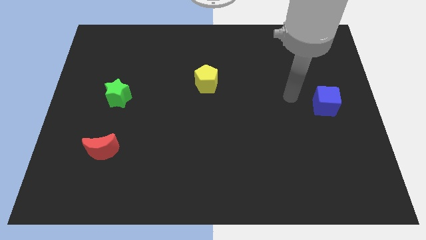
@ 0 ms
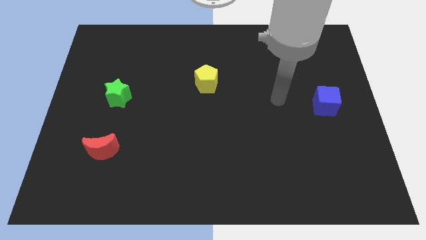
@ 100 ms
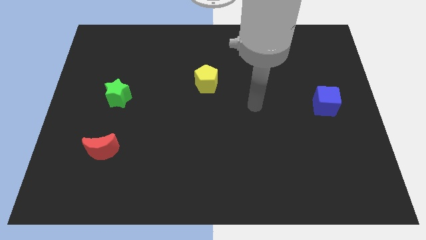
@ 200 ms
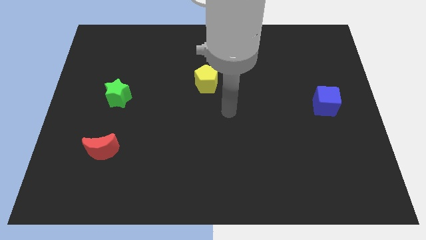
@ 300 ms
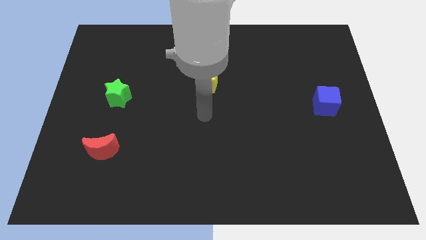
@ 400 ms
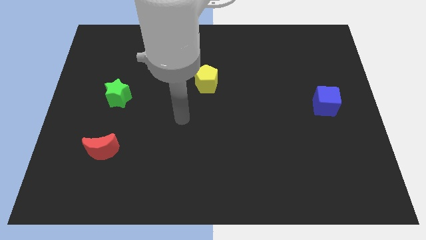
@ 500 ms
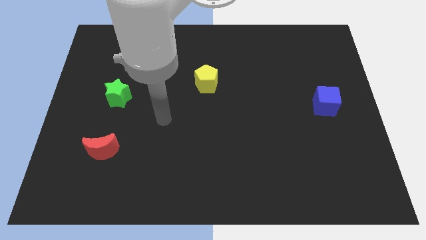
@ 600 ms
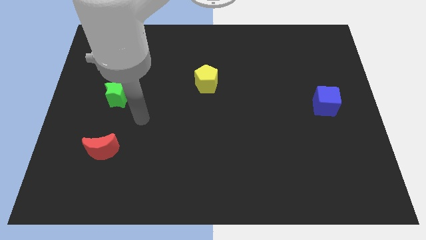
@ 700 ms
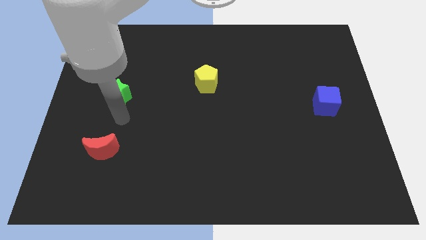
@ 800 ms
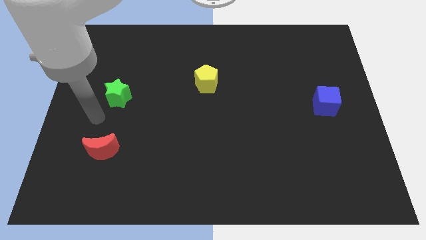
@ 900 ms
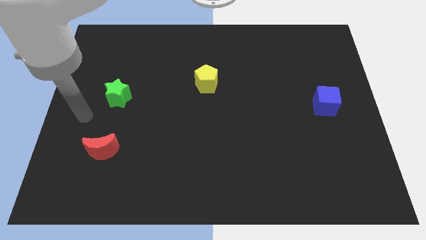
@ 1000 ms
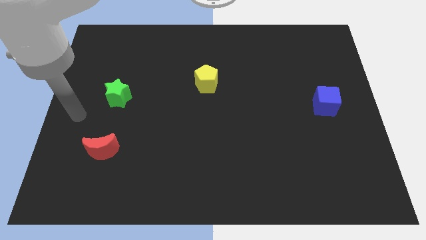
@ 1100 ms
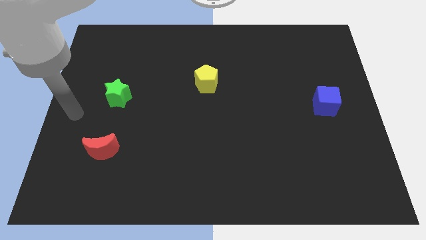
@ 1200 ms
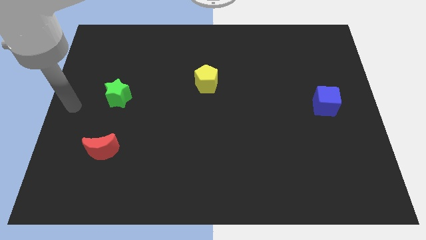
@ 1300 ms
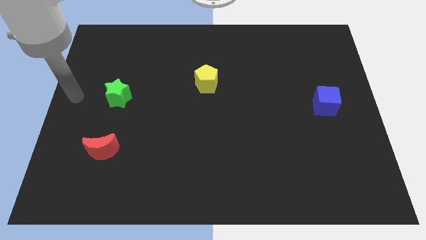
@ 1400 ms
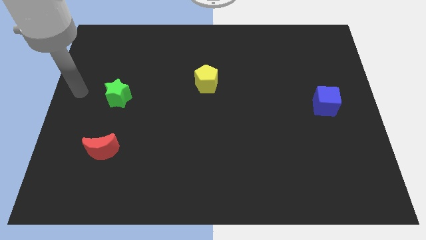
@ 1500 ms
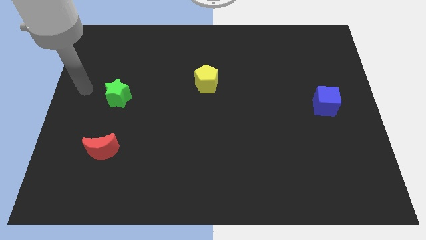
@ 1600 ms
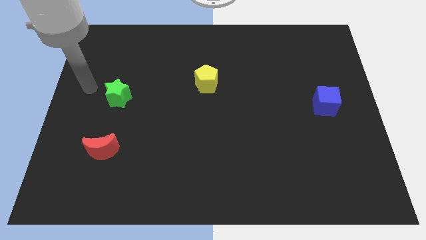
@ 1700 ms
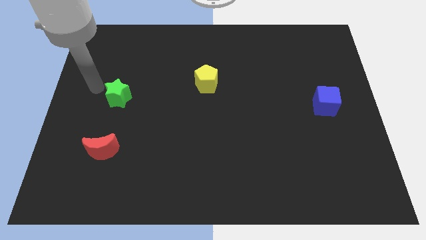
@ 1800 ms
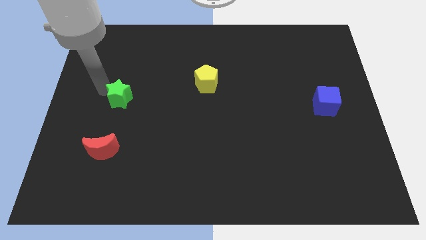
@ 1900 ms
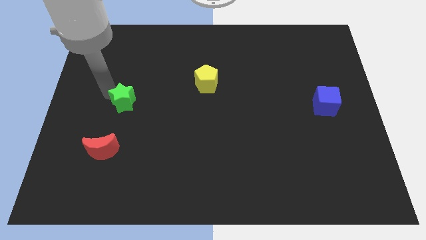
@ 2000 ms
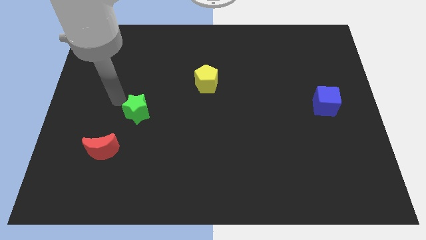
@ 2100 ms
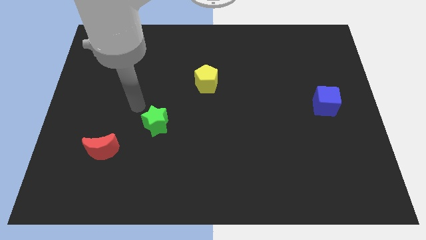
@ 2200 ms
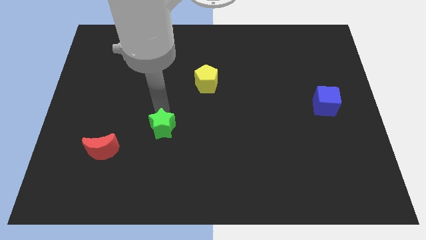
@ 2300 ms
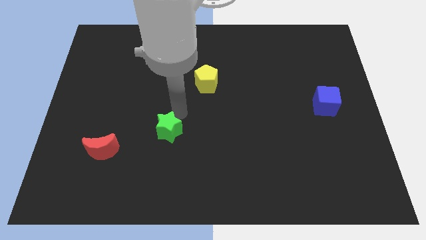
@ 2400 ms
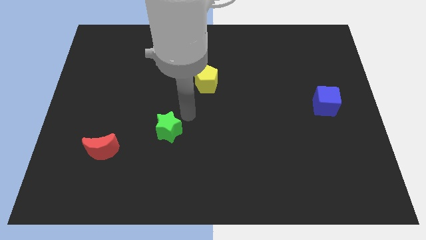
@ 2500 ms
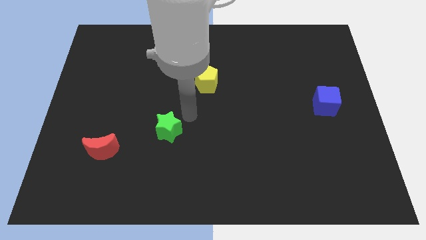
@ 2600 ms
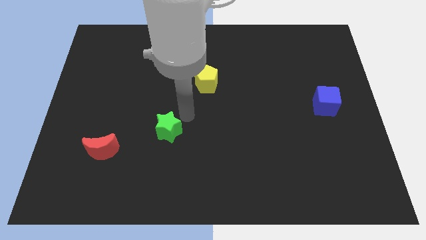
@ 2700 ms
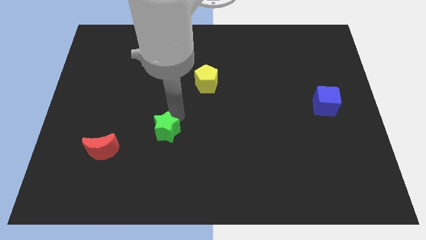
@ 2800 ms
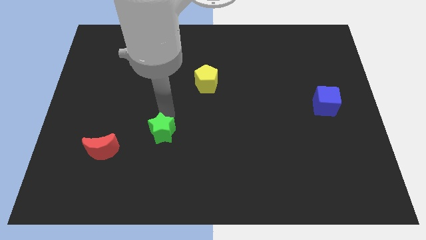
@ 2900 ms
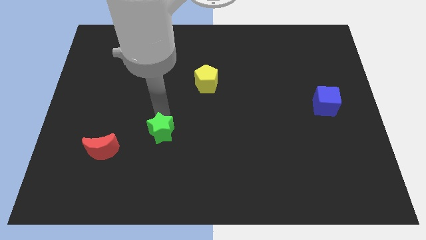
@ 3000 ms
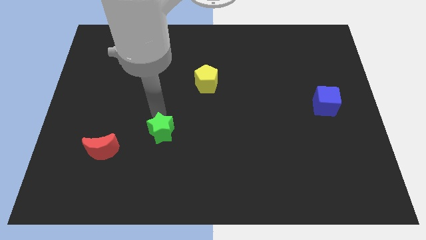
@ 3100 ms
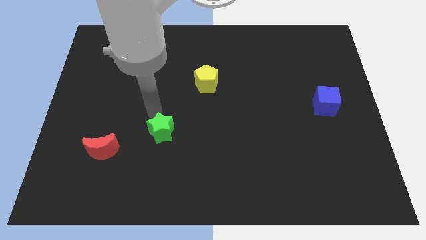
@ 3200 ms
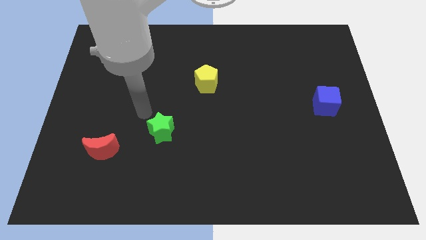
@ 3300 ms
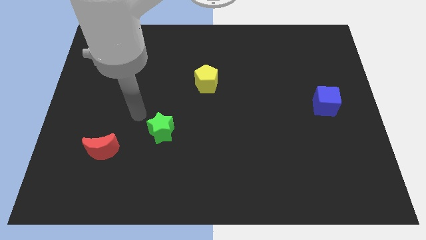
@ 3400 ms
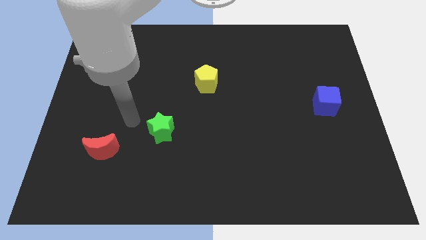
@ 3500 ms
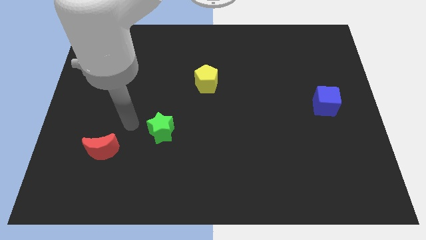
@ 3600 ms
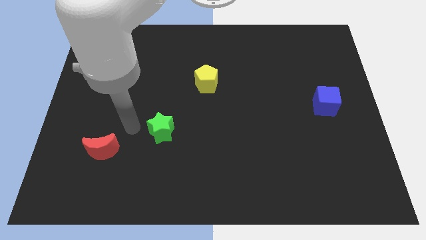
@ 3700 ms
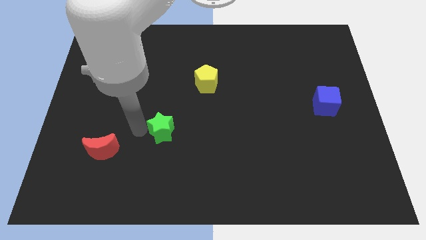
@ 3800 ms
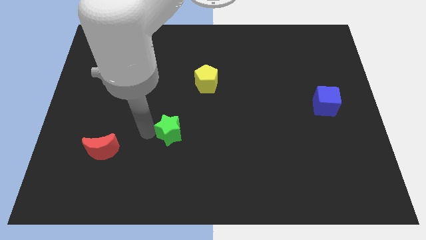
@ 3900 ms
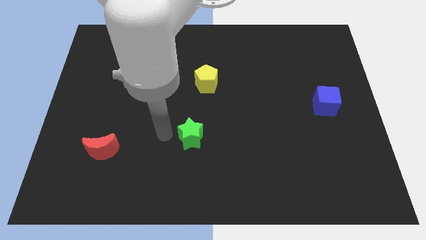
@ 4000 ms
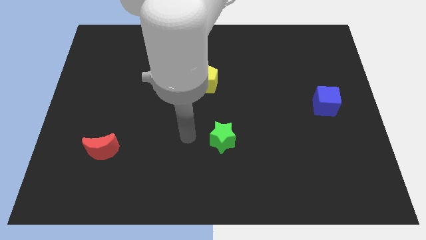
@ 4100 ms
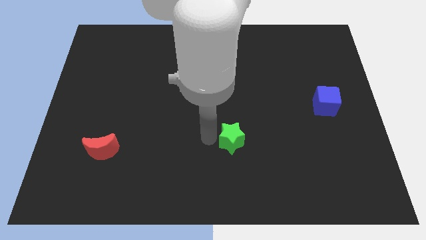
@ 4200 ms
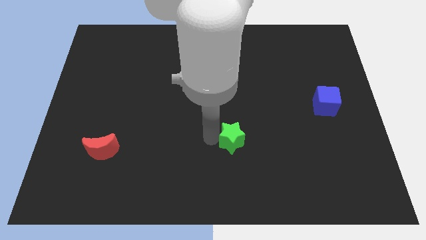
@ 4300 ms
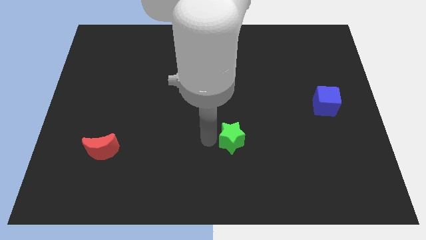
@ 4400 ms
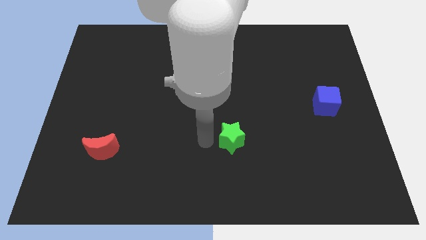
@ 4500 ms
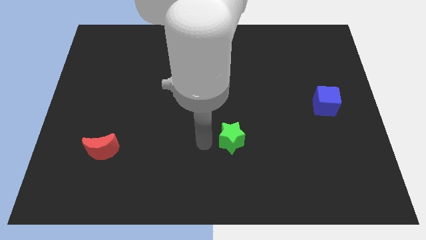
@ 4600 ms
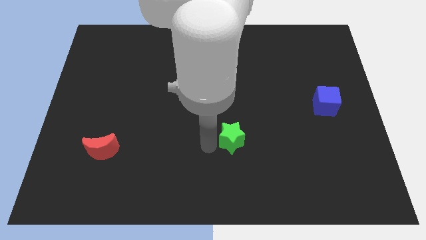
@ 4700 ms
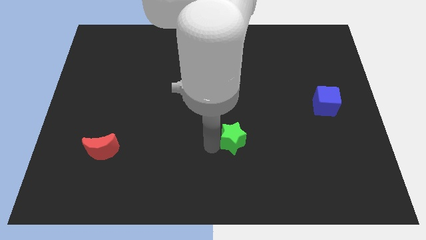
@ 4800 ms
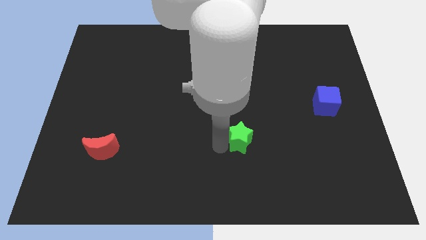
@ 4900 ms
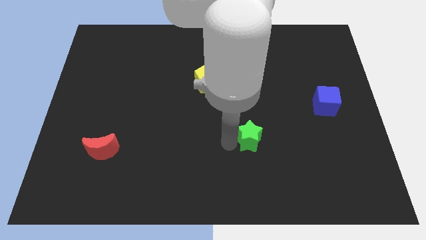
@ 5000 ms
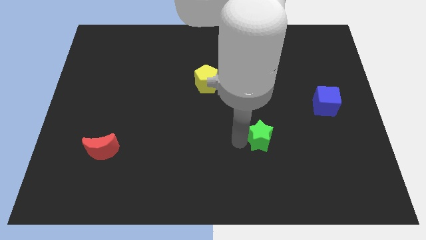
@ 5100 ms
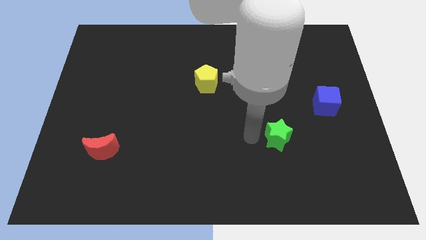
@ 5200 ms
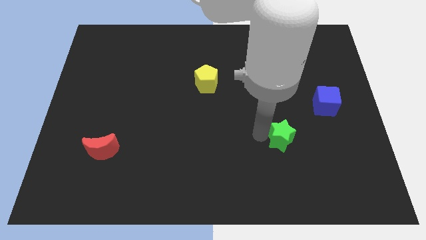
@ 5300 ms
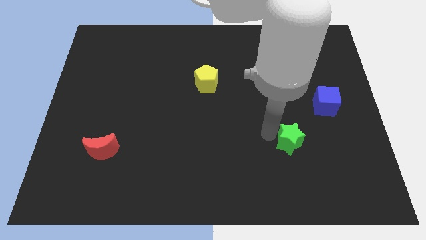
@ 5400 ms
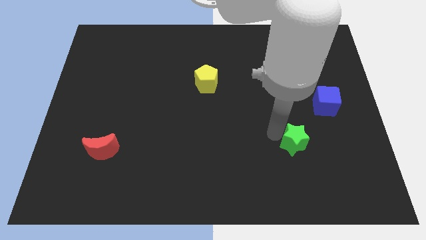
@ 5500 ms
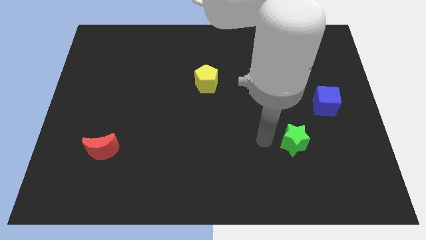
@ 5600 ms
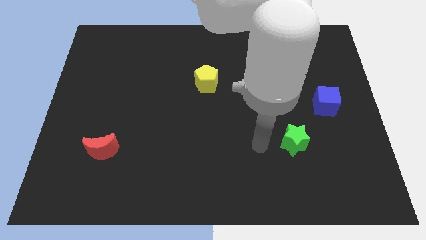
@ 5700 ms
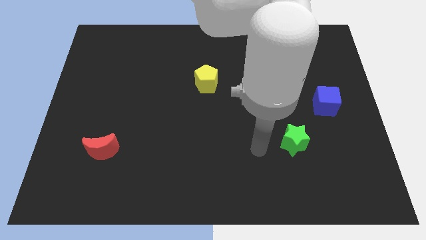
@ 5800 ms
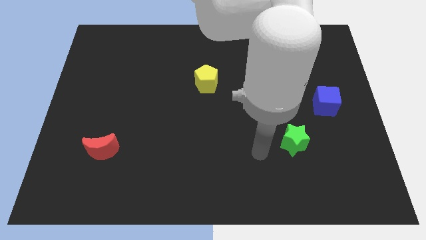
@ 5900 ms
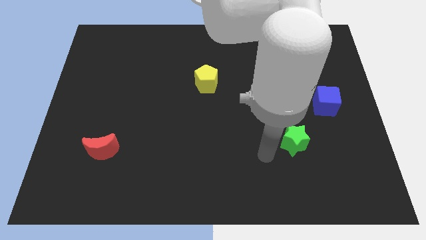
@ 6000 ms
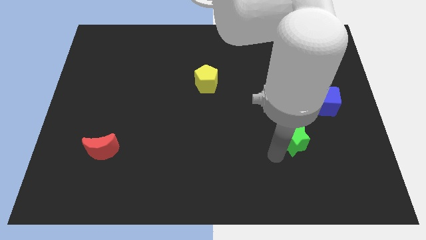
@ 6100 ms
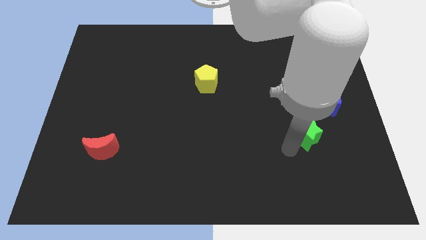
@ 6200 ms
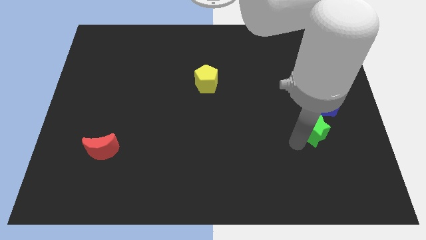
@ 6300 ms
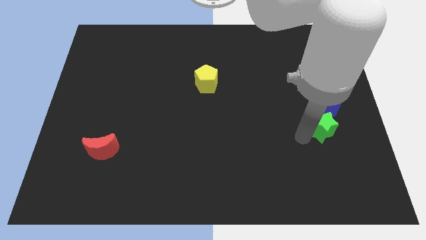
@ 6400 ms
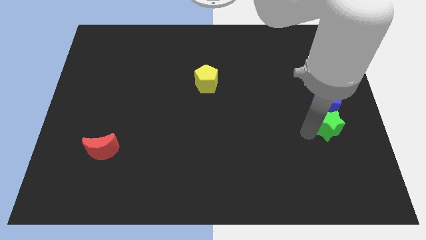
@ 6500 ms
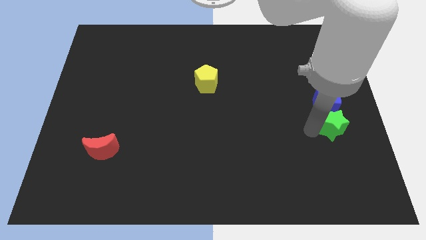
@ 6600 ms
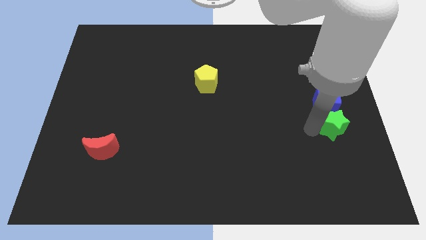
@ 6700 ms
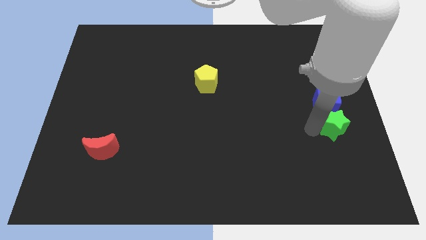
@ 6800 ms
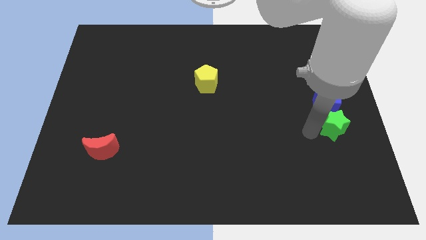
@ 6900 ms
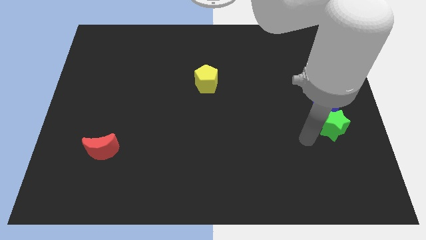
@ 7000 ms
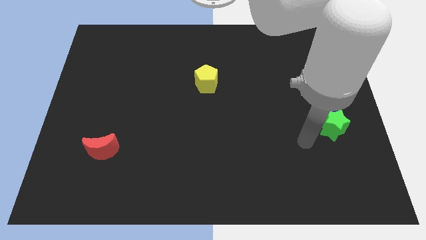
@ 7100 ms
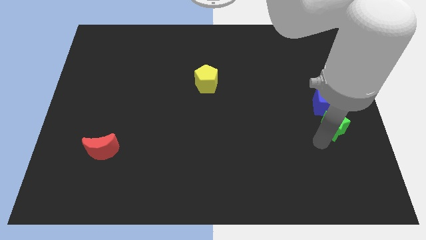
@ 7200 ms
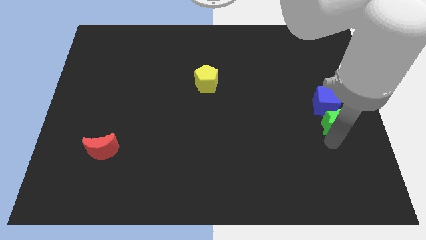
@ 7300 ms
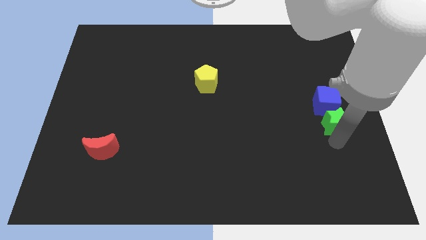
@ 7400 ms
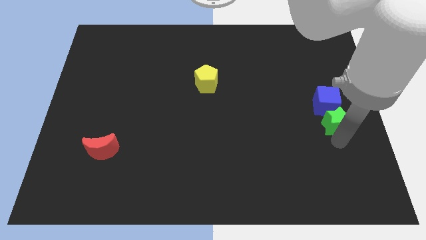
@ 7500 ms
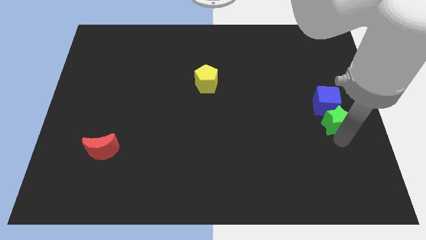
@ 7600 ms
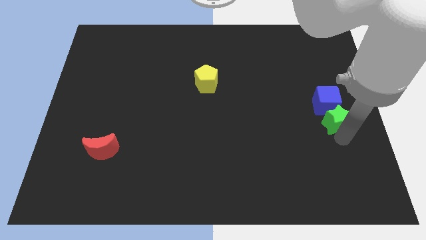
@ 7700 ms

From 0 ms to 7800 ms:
move the star next to the blue cube

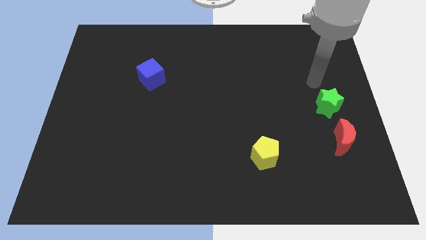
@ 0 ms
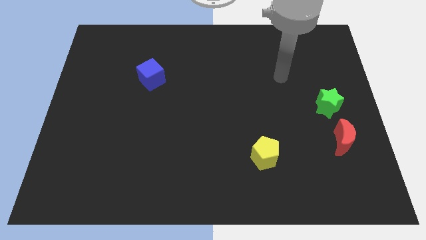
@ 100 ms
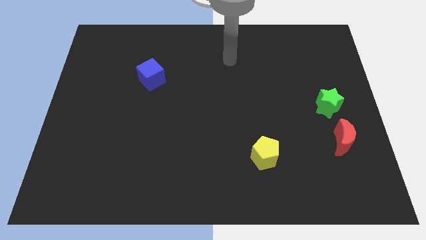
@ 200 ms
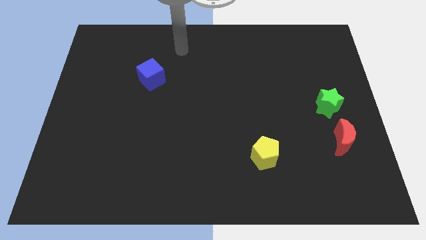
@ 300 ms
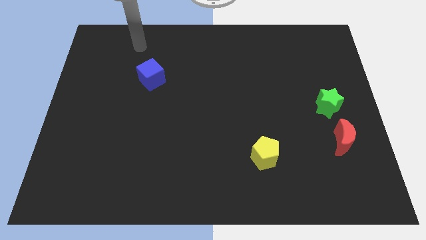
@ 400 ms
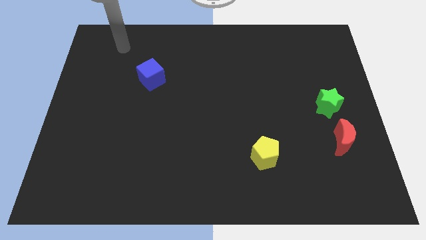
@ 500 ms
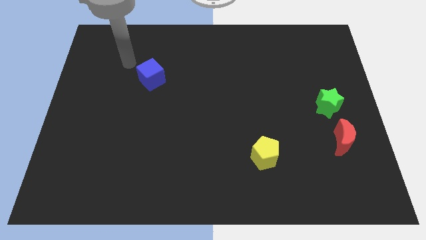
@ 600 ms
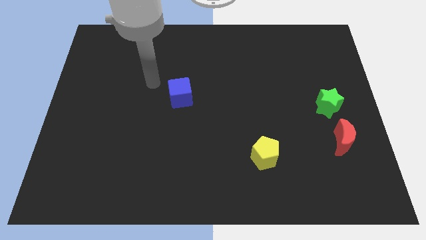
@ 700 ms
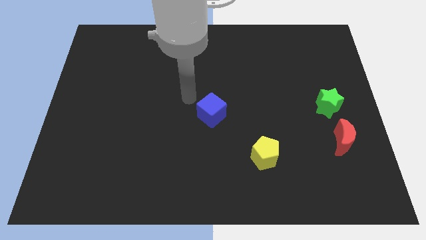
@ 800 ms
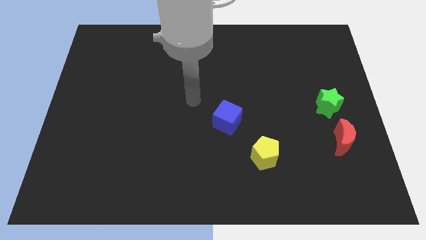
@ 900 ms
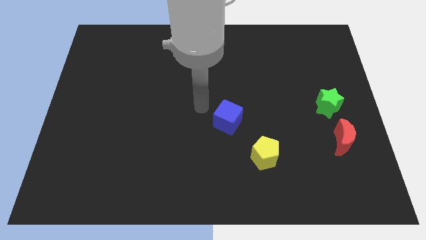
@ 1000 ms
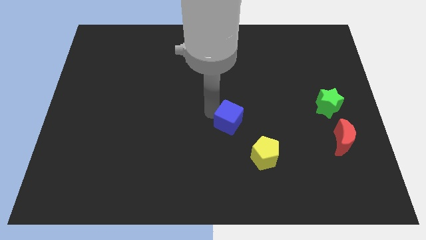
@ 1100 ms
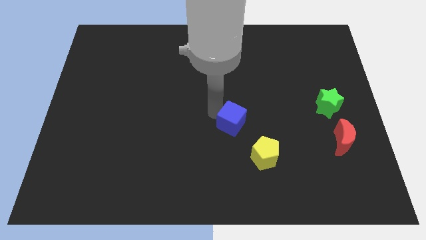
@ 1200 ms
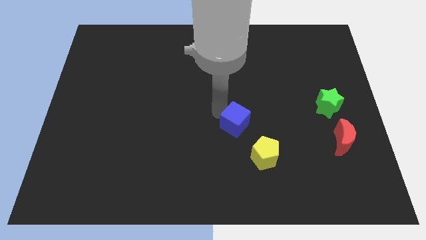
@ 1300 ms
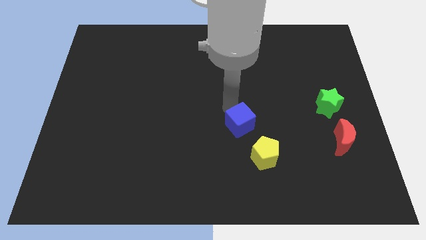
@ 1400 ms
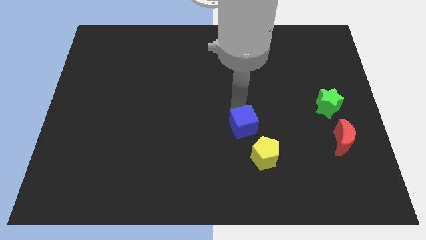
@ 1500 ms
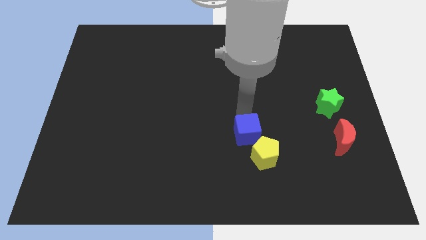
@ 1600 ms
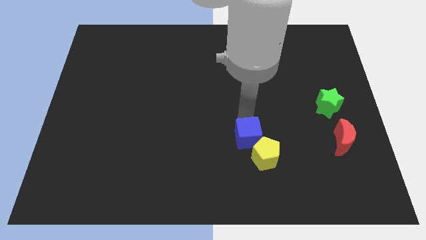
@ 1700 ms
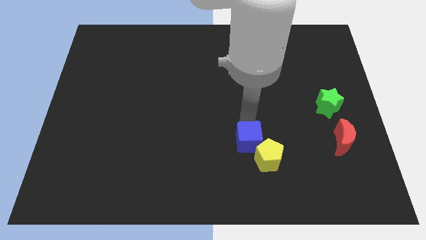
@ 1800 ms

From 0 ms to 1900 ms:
slide the cube next to the yellow pentagon
